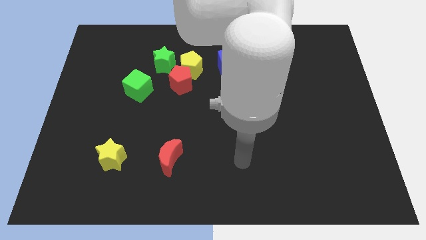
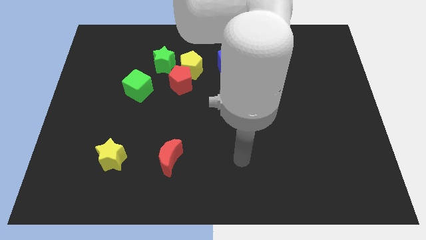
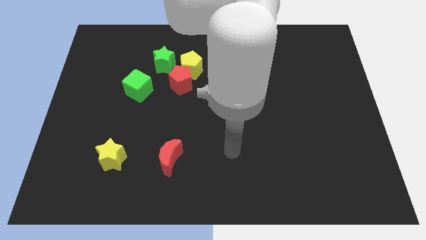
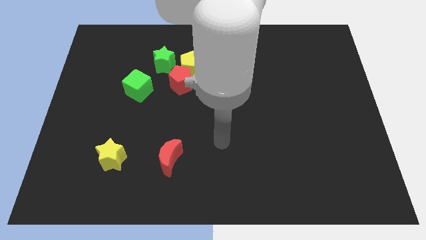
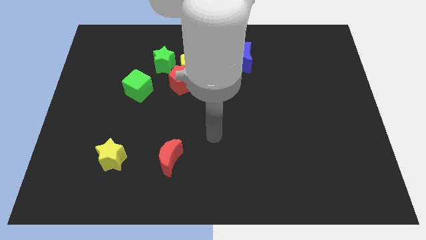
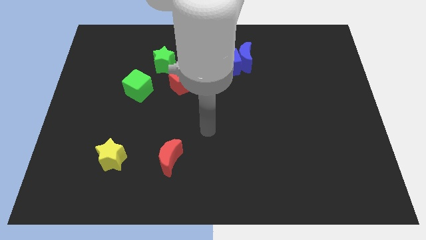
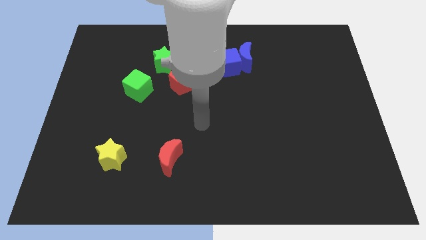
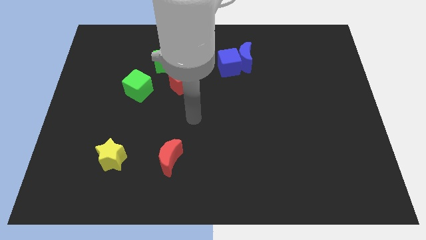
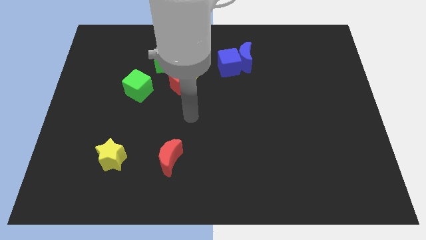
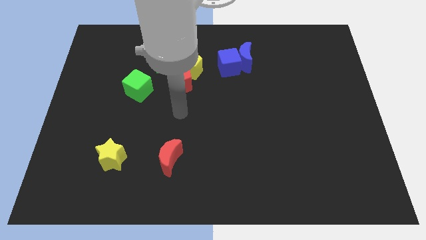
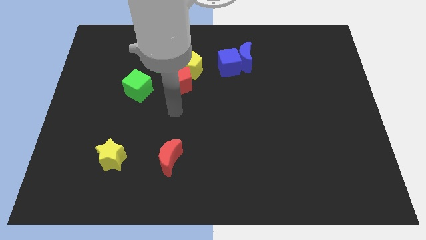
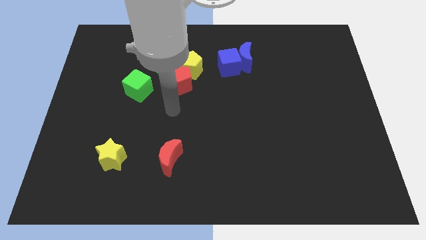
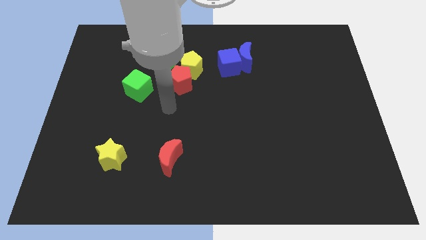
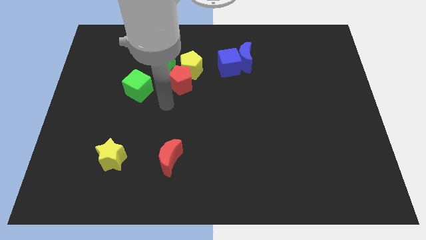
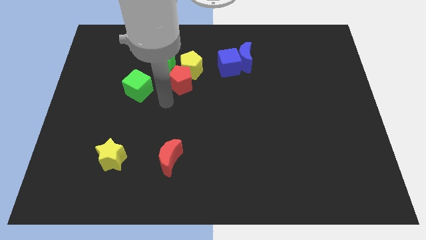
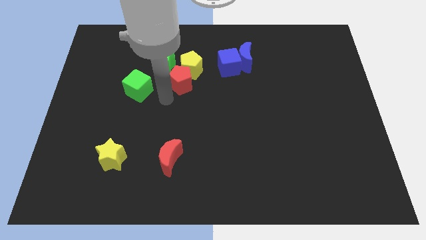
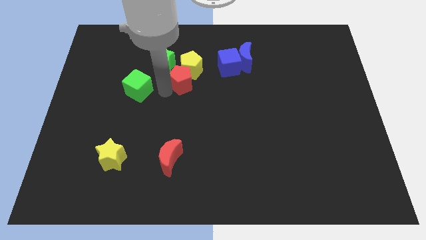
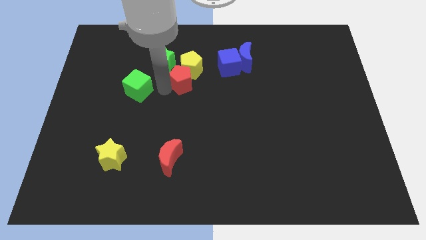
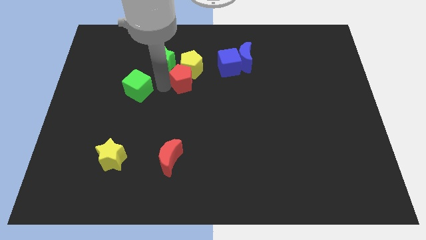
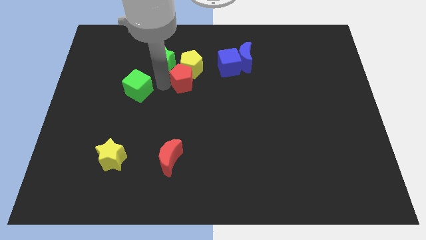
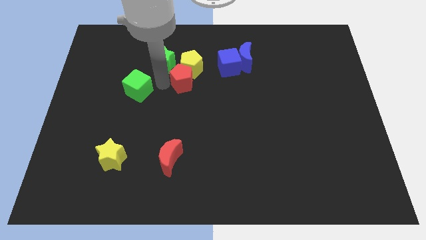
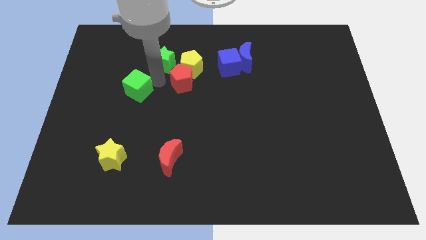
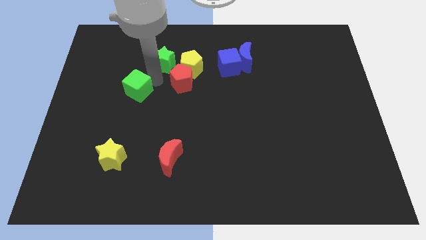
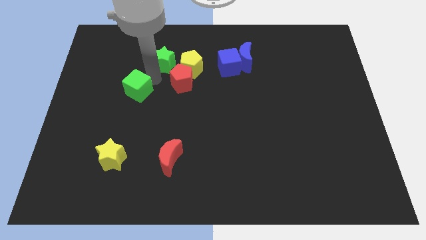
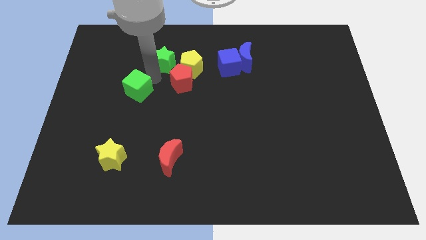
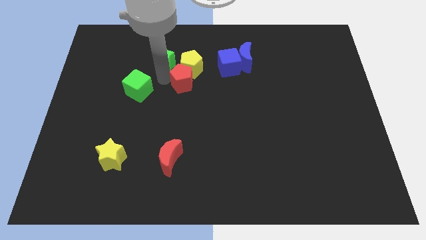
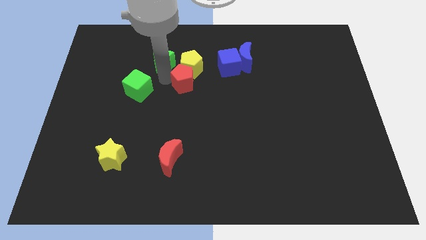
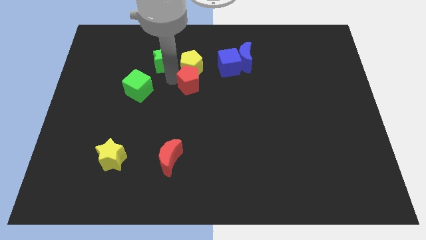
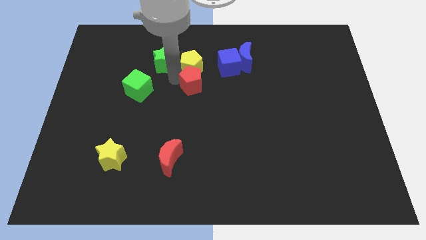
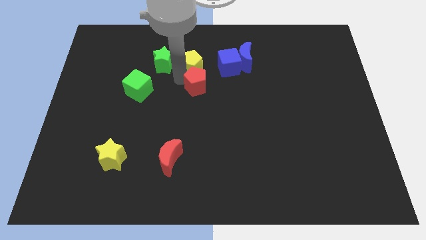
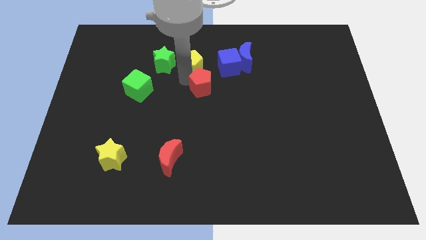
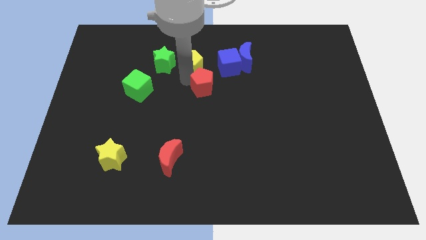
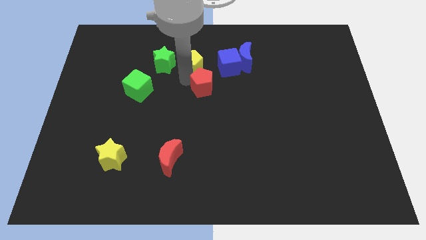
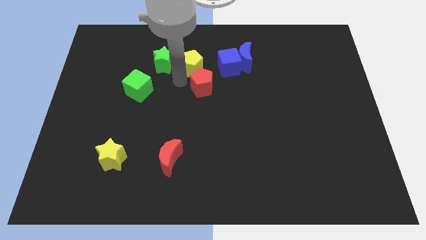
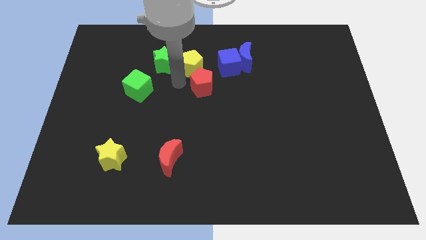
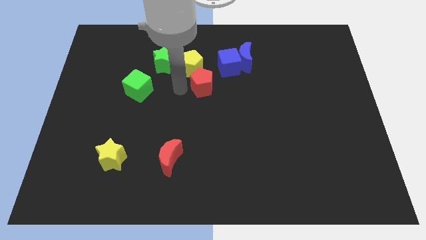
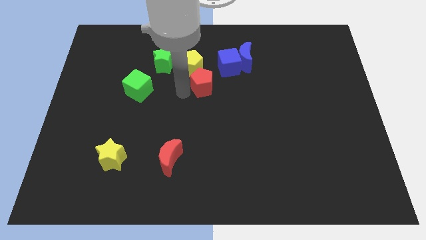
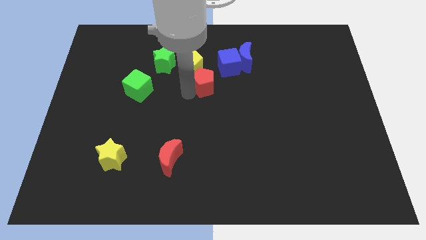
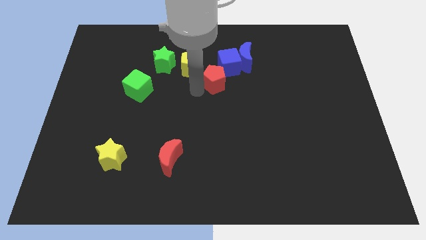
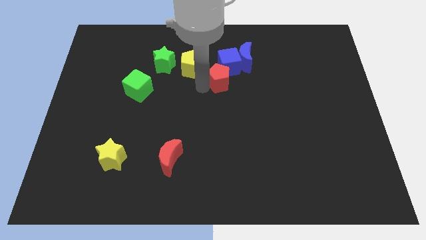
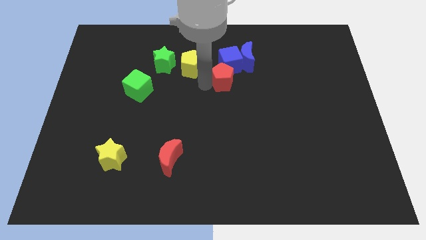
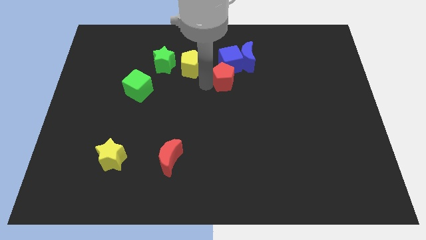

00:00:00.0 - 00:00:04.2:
put the red pentagon next to the blue cube

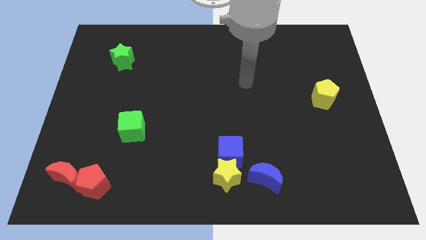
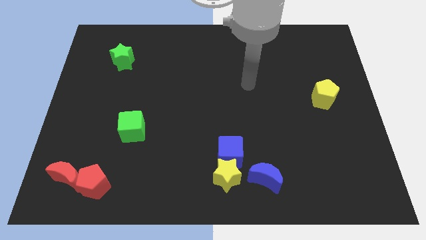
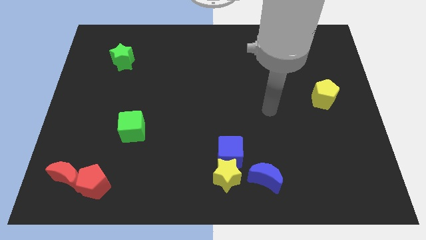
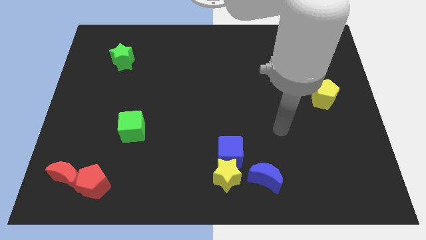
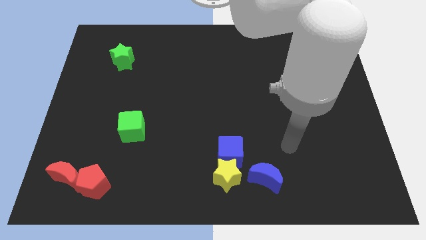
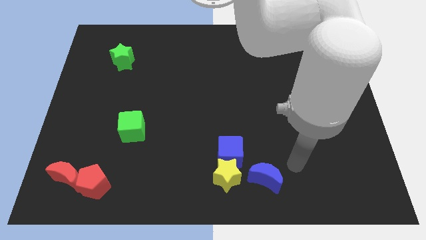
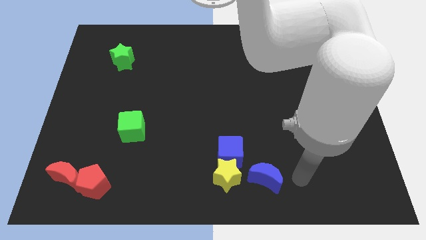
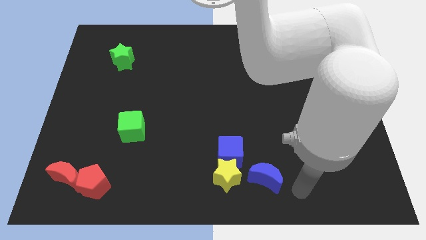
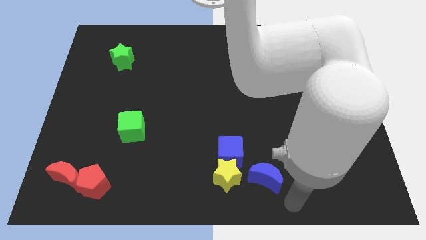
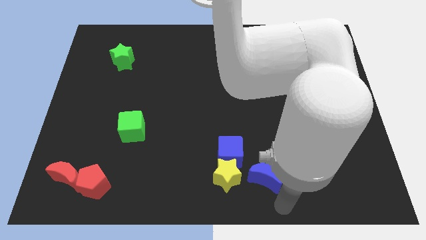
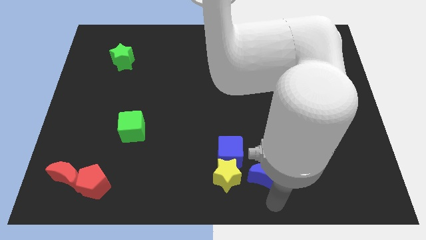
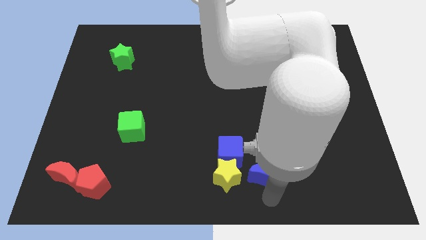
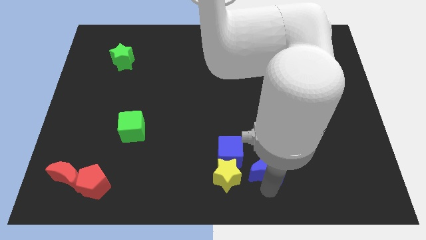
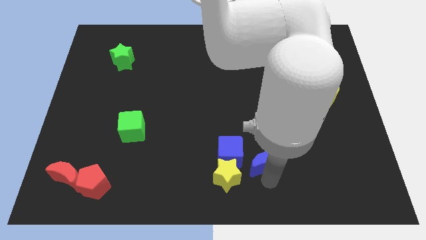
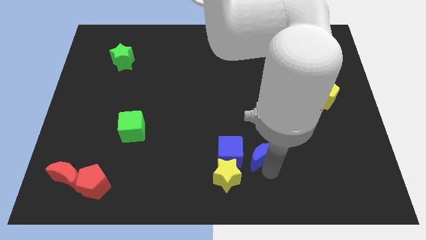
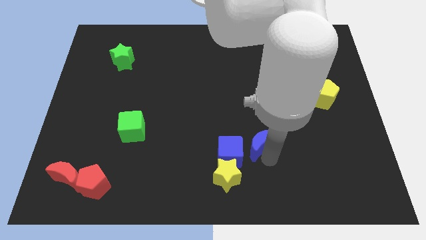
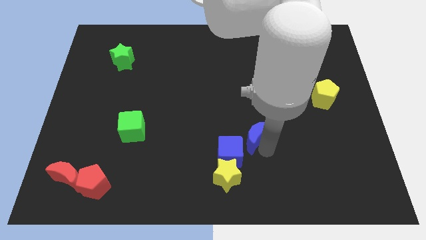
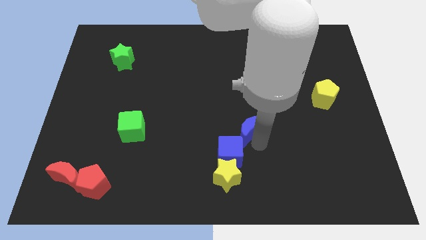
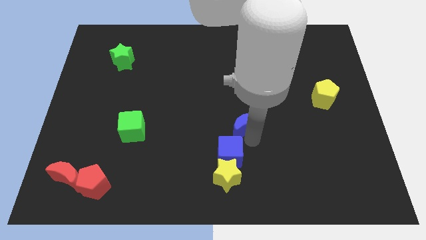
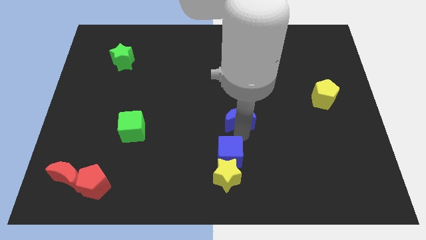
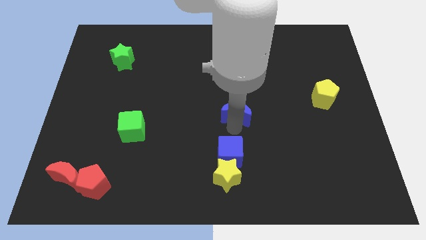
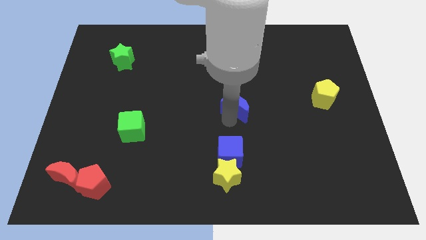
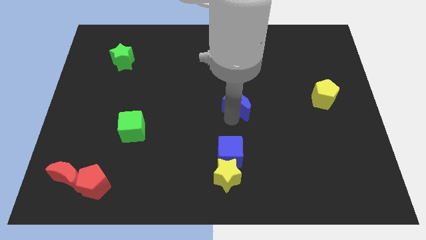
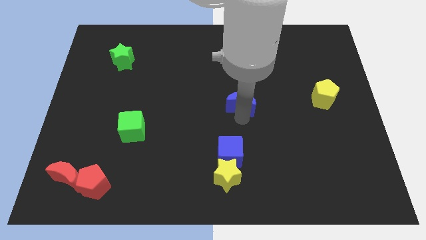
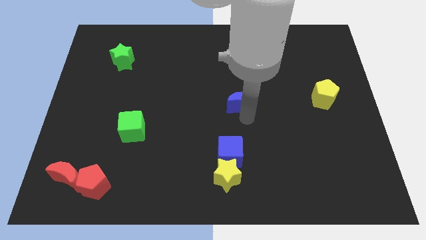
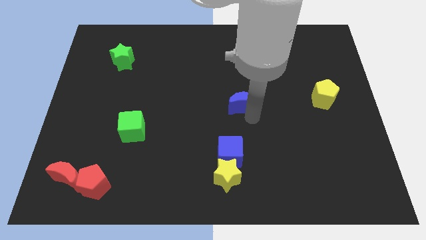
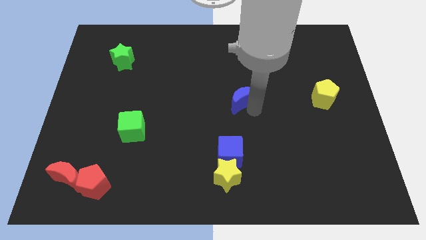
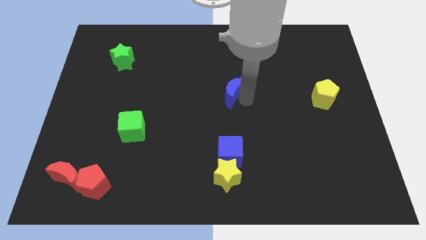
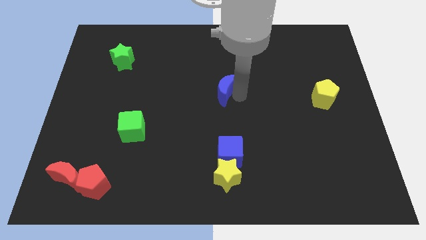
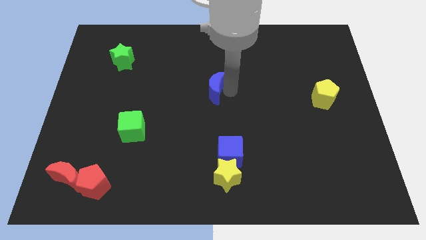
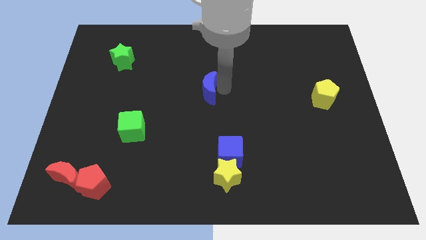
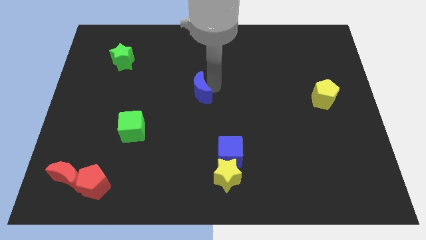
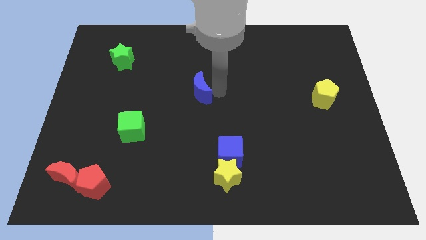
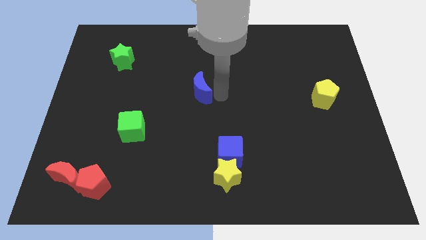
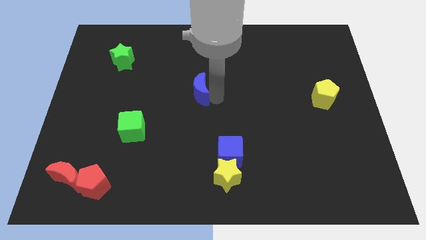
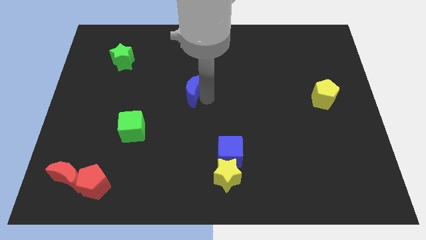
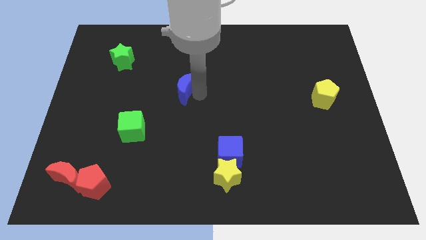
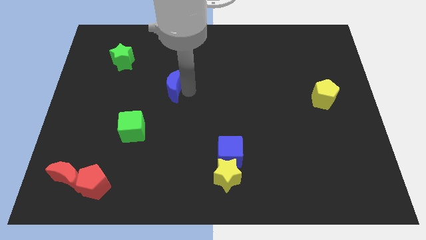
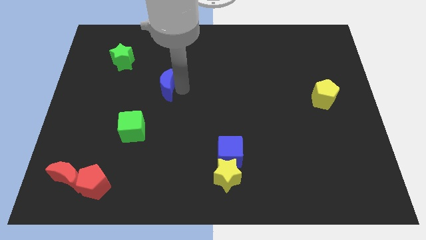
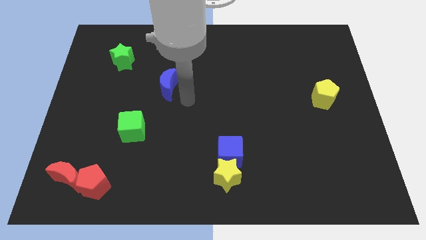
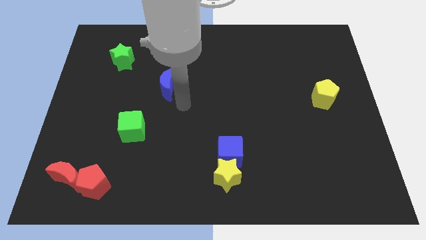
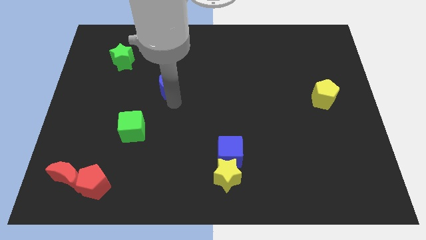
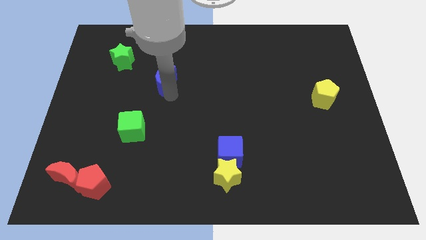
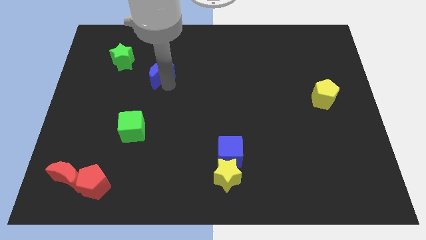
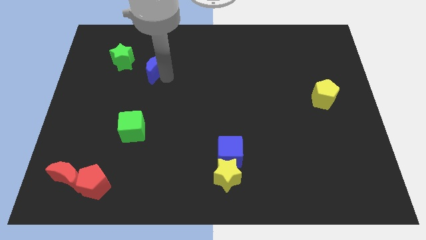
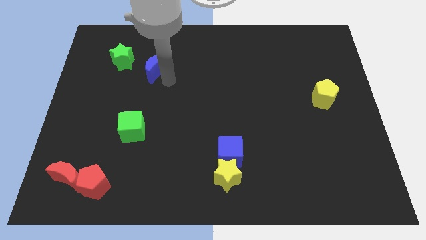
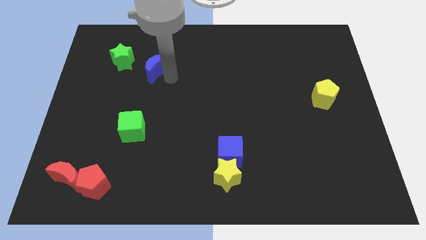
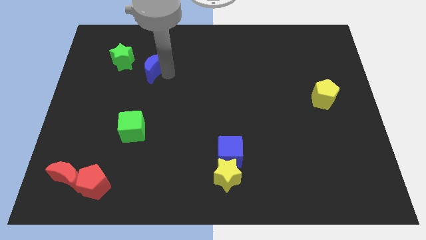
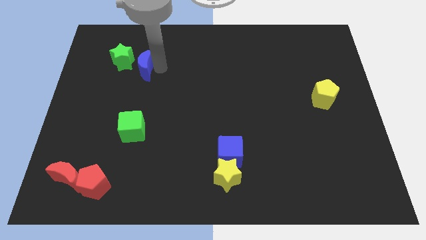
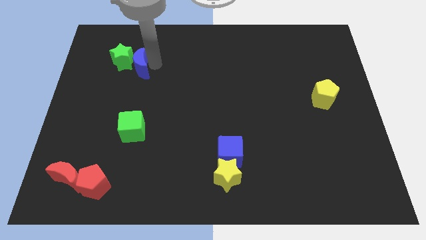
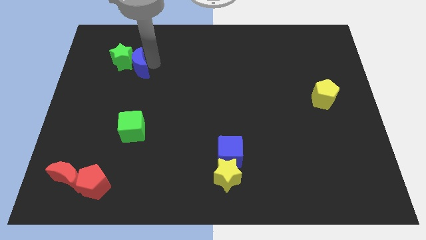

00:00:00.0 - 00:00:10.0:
slide the blue moon next to the green star
